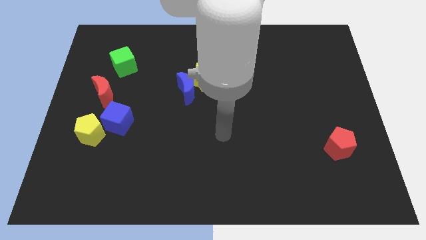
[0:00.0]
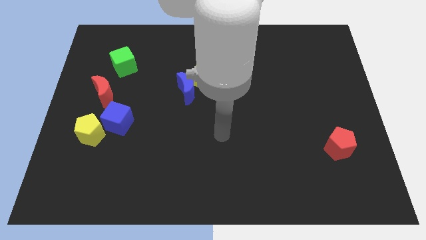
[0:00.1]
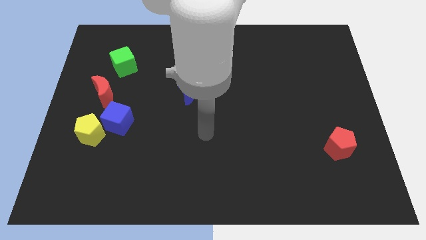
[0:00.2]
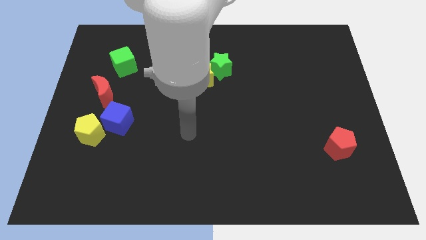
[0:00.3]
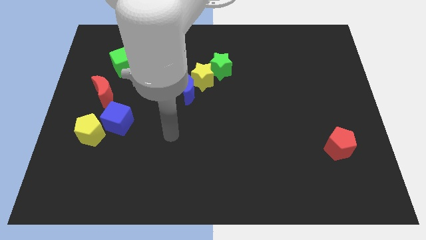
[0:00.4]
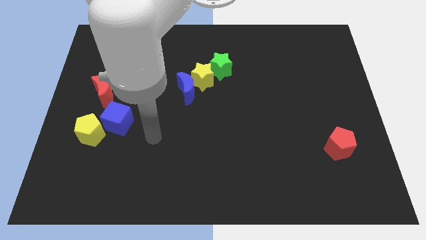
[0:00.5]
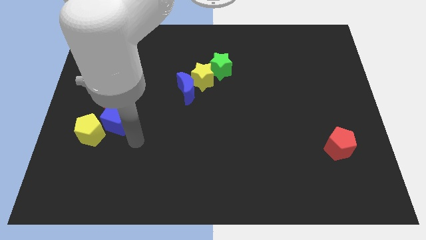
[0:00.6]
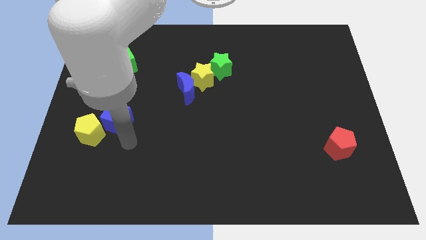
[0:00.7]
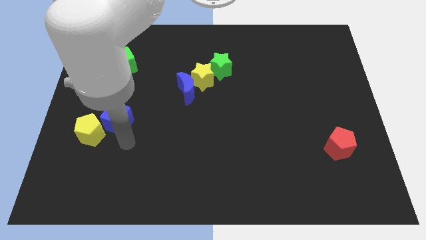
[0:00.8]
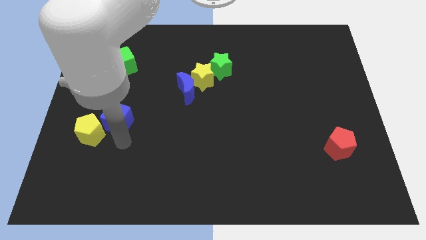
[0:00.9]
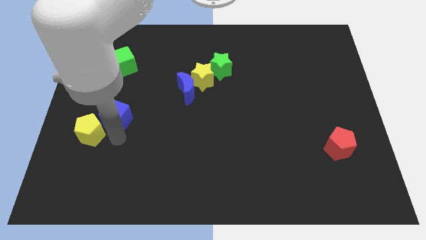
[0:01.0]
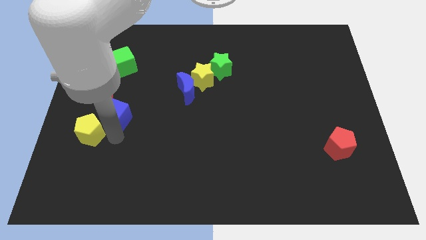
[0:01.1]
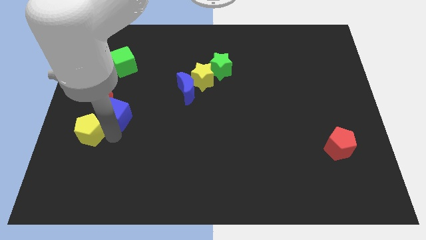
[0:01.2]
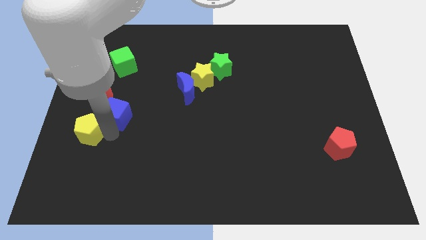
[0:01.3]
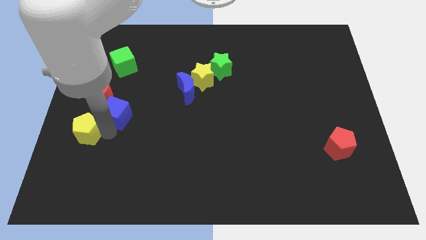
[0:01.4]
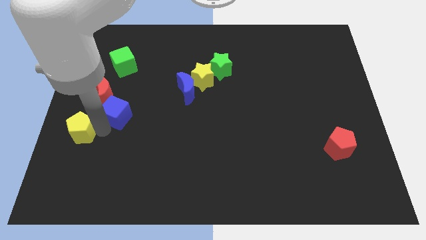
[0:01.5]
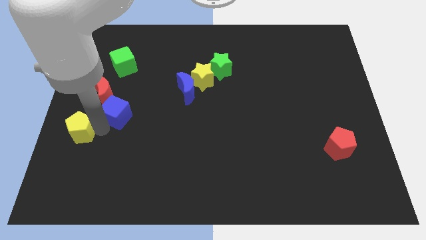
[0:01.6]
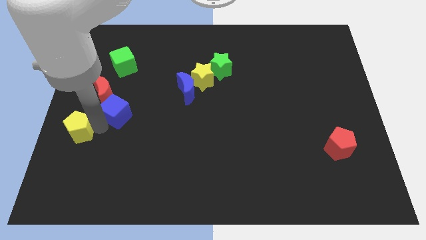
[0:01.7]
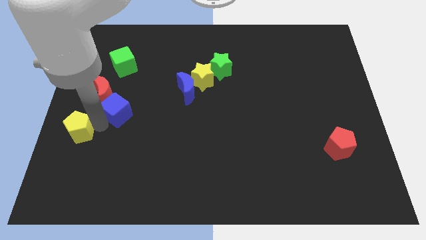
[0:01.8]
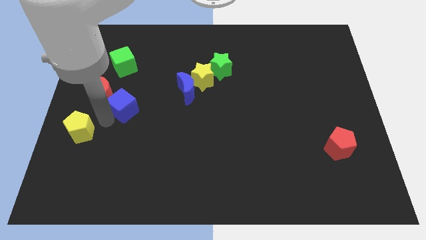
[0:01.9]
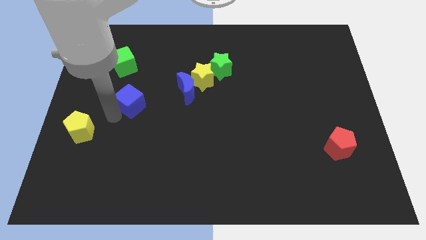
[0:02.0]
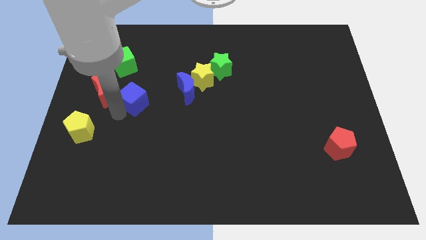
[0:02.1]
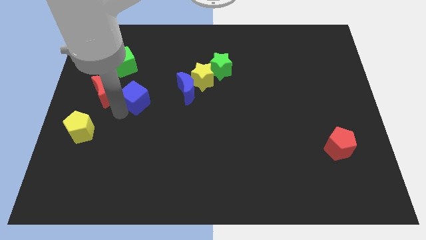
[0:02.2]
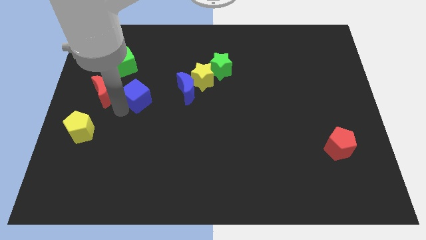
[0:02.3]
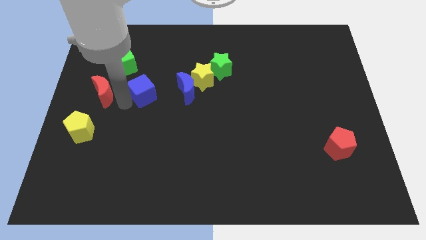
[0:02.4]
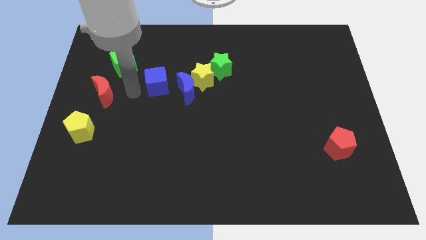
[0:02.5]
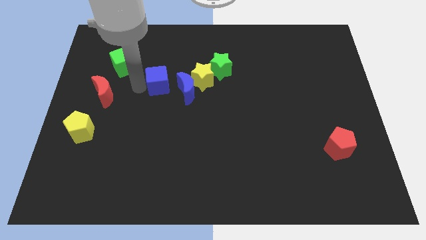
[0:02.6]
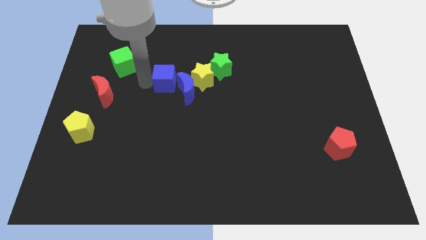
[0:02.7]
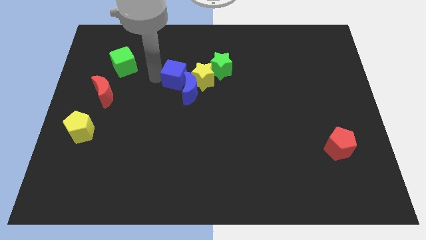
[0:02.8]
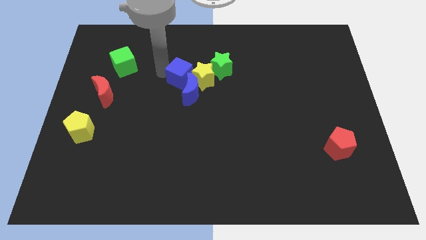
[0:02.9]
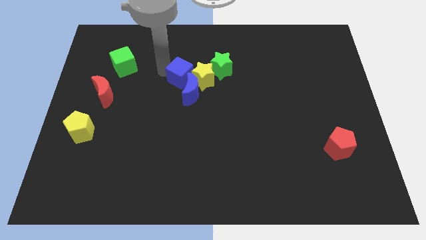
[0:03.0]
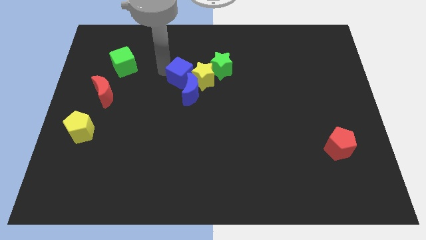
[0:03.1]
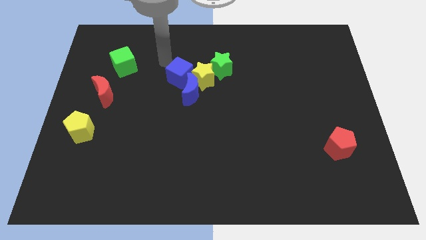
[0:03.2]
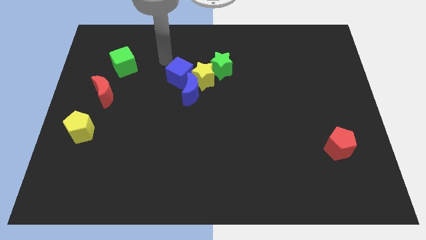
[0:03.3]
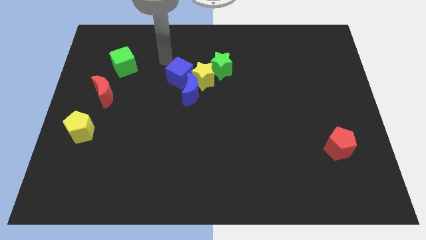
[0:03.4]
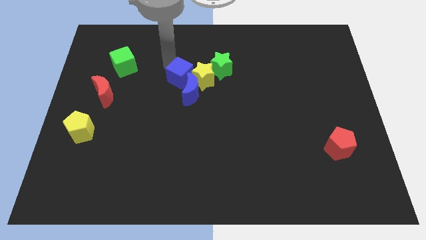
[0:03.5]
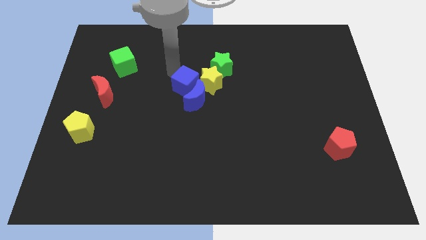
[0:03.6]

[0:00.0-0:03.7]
move the blue cube into the top of blue crescent

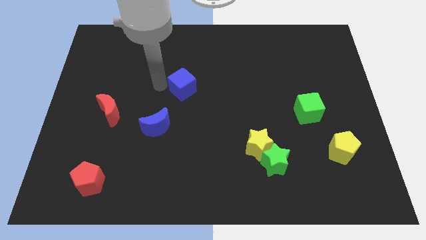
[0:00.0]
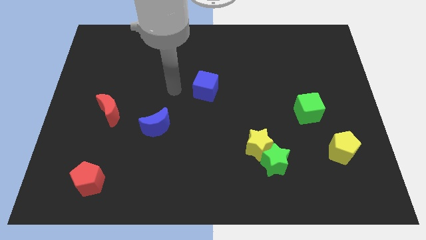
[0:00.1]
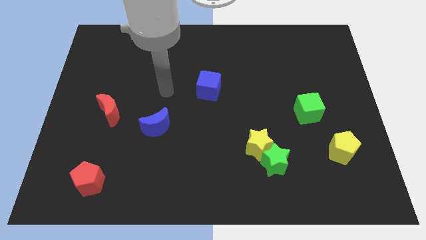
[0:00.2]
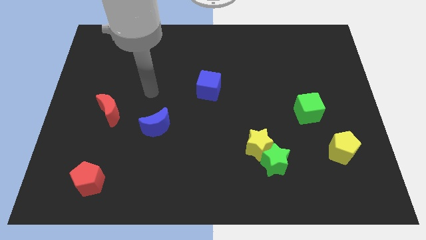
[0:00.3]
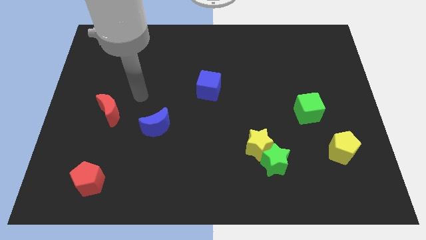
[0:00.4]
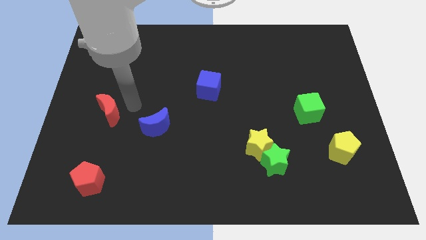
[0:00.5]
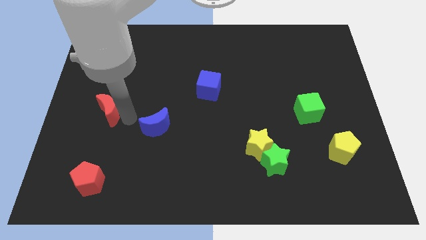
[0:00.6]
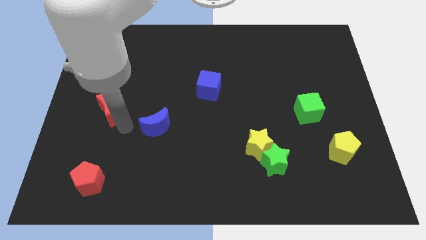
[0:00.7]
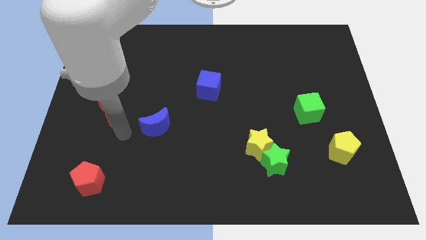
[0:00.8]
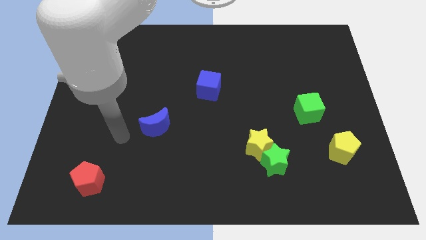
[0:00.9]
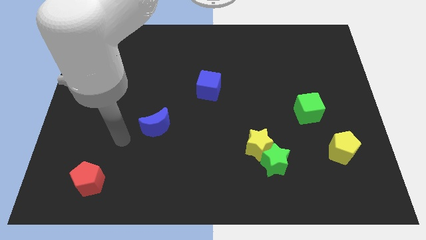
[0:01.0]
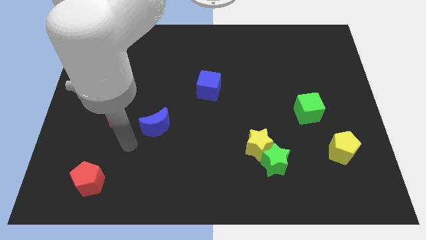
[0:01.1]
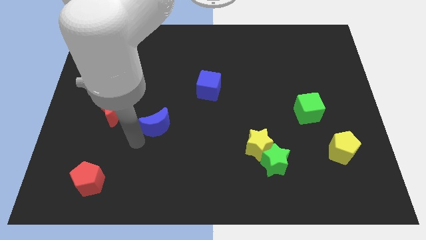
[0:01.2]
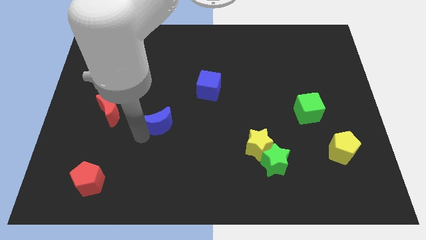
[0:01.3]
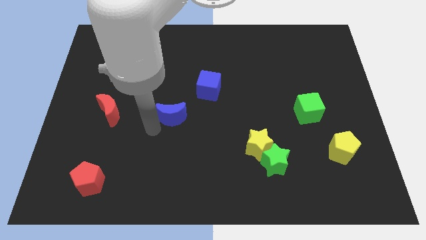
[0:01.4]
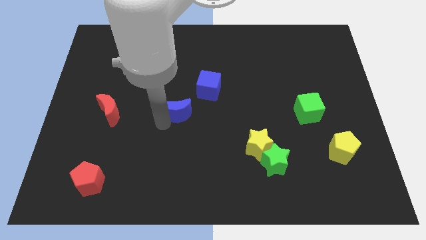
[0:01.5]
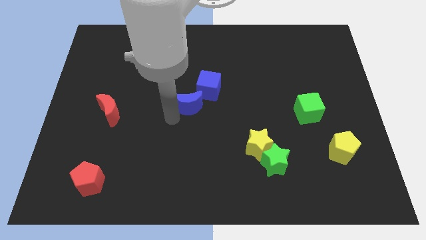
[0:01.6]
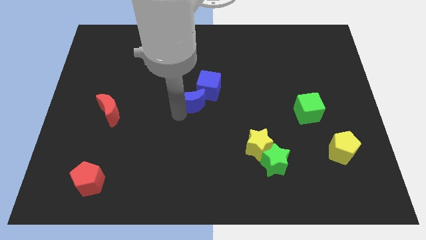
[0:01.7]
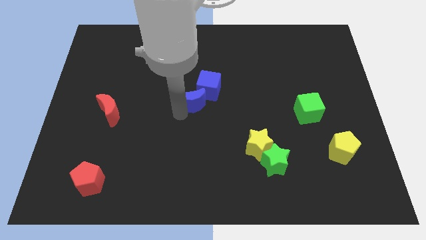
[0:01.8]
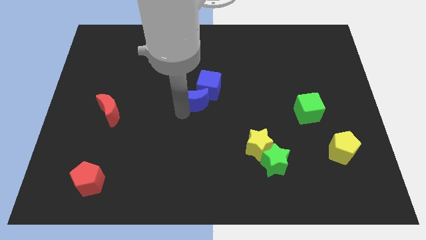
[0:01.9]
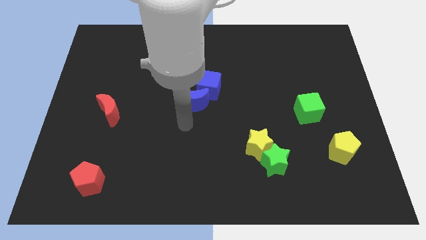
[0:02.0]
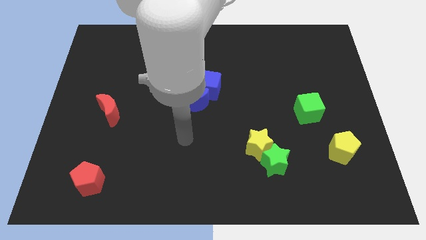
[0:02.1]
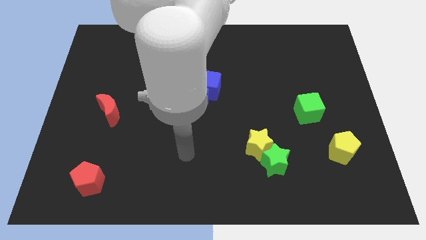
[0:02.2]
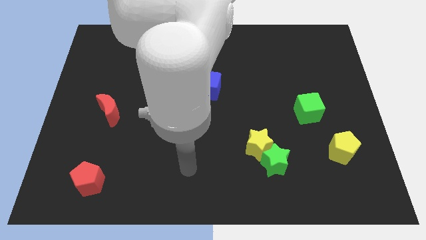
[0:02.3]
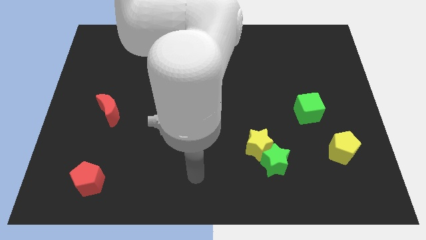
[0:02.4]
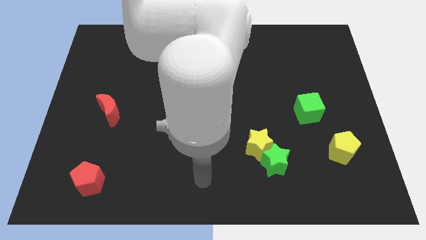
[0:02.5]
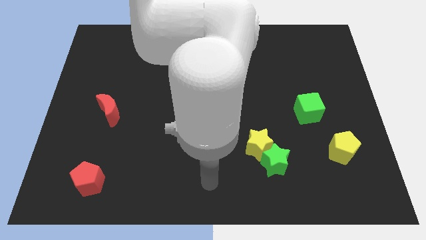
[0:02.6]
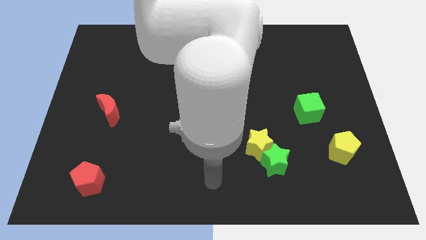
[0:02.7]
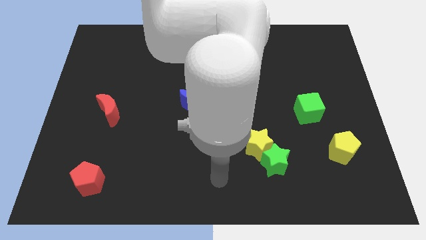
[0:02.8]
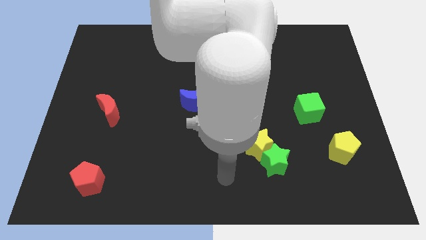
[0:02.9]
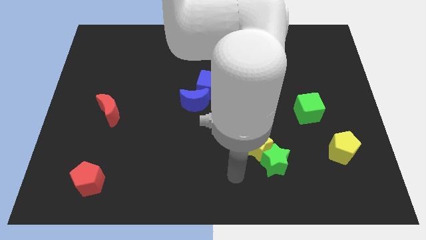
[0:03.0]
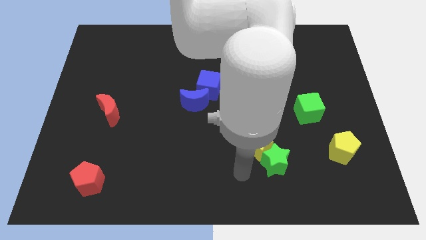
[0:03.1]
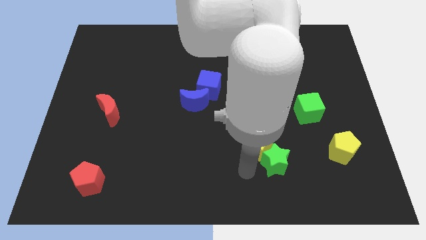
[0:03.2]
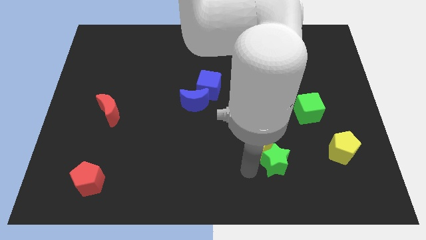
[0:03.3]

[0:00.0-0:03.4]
place the blue crescent below the blue cube

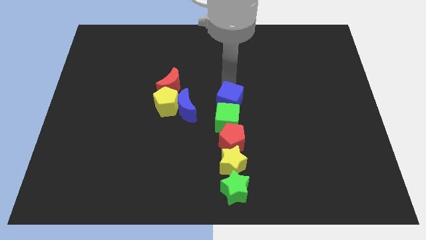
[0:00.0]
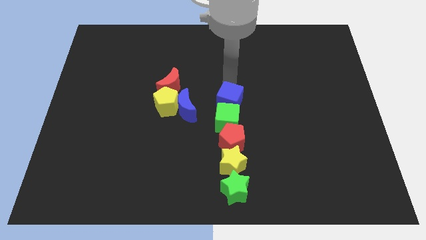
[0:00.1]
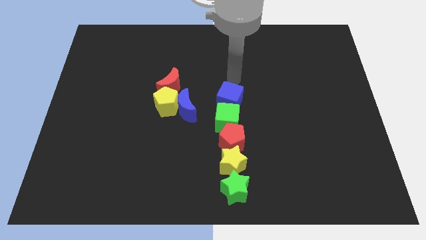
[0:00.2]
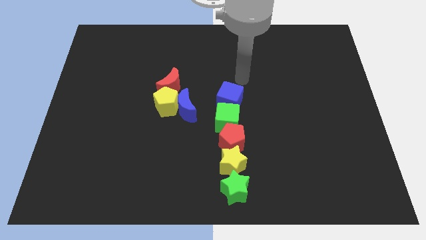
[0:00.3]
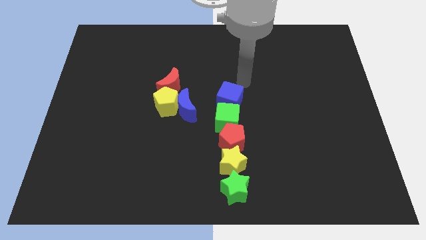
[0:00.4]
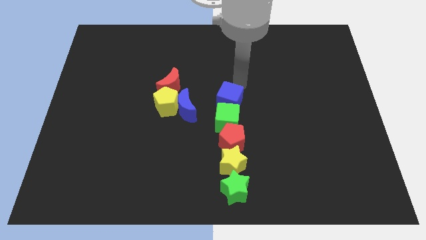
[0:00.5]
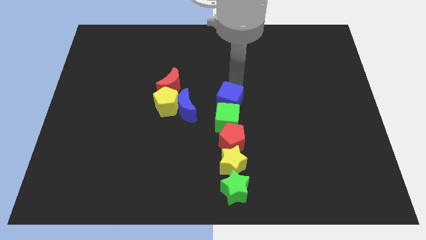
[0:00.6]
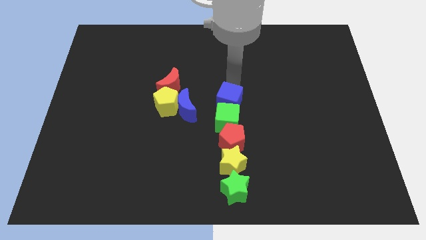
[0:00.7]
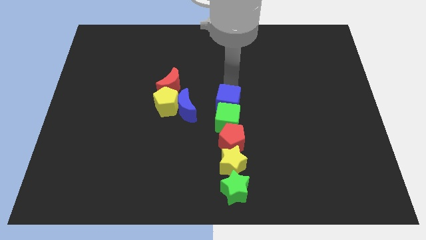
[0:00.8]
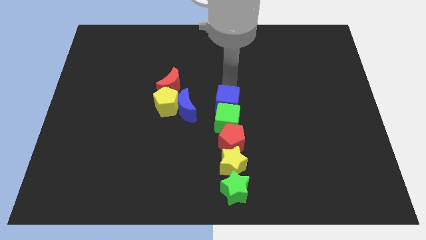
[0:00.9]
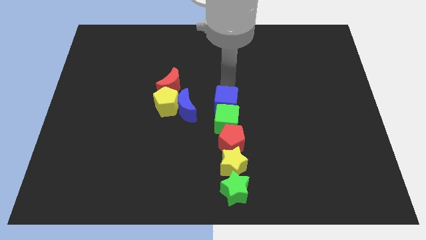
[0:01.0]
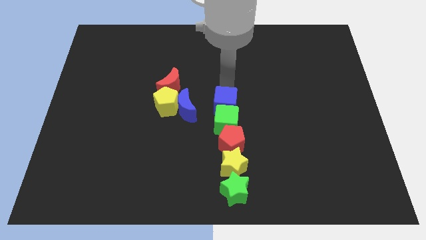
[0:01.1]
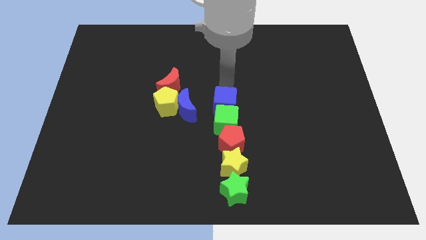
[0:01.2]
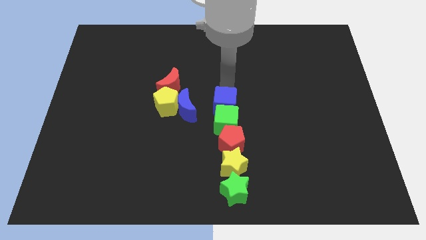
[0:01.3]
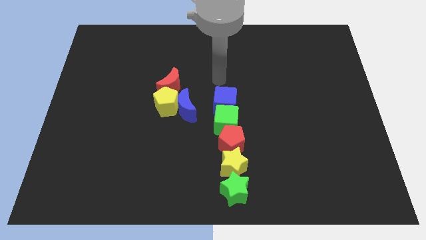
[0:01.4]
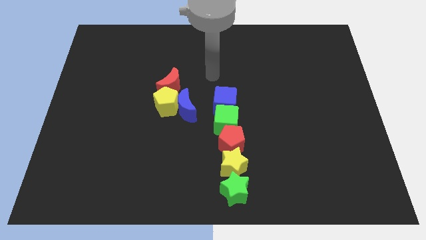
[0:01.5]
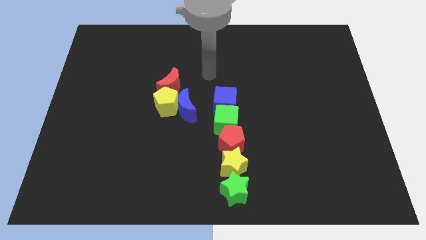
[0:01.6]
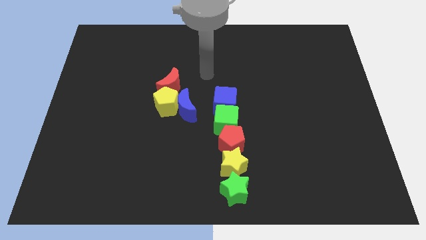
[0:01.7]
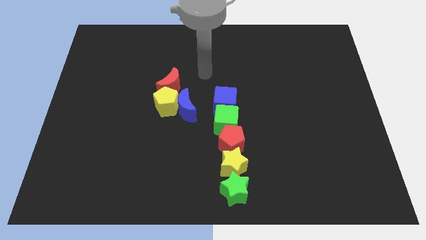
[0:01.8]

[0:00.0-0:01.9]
push blue cube into green cube
